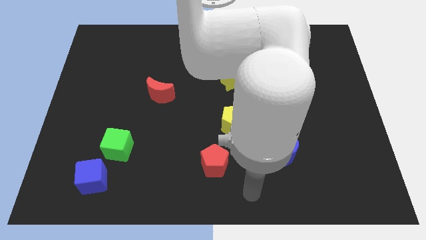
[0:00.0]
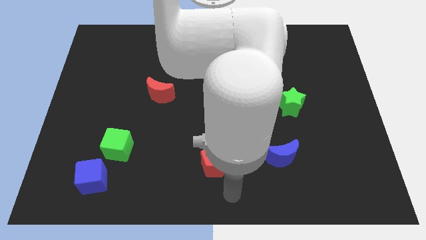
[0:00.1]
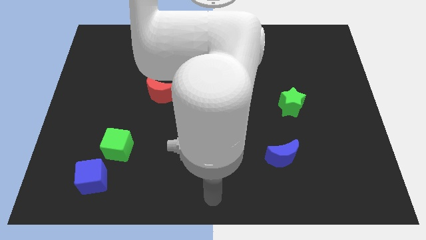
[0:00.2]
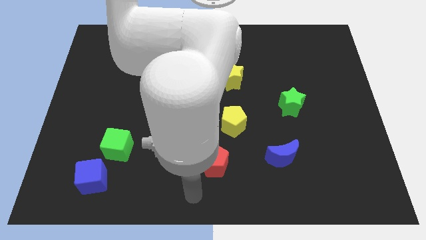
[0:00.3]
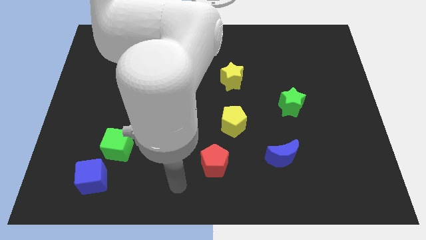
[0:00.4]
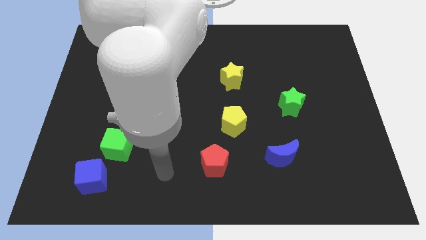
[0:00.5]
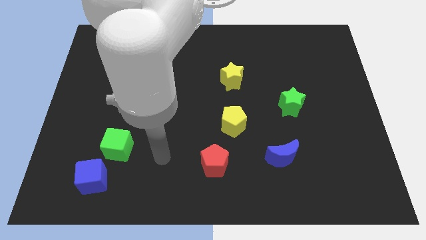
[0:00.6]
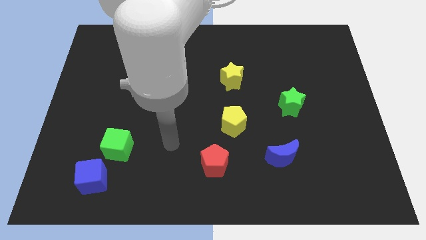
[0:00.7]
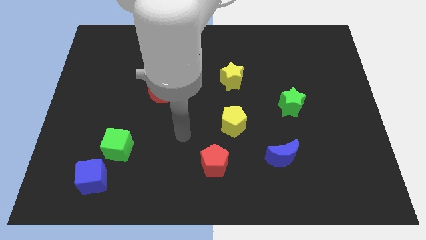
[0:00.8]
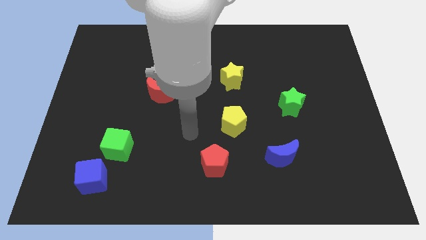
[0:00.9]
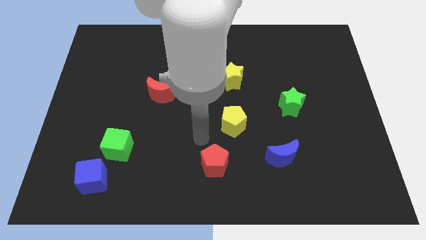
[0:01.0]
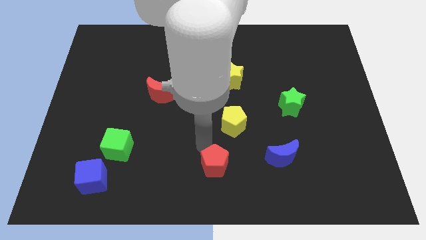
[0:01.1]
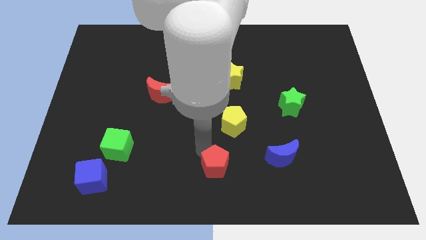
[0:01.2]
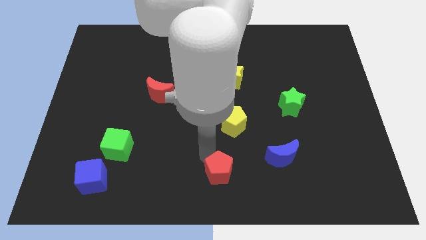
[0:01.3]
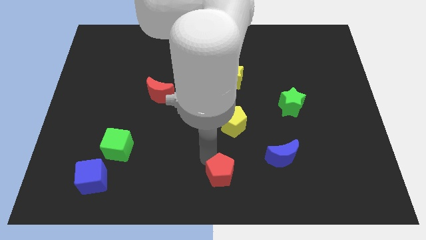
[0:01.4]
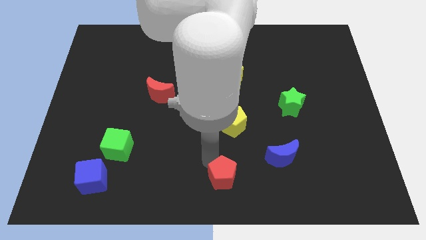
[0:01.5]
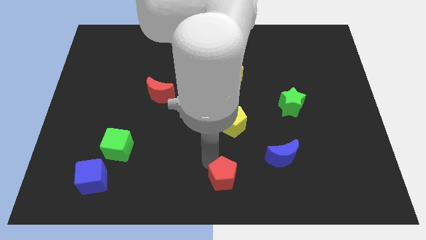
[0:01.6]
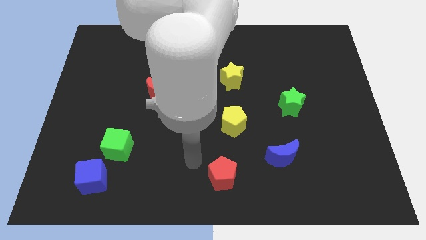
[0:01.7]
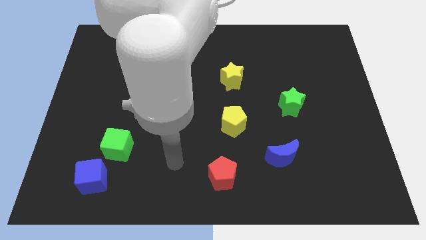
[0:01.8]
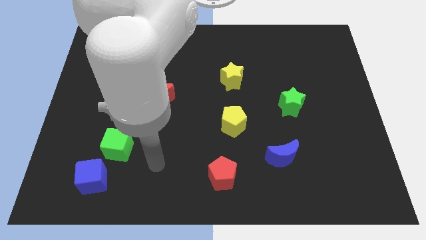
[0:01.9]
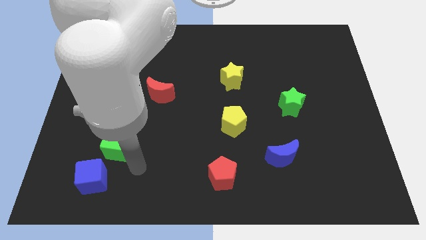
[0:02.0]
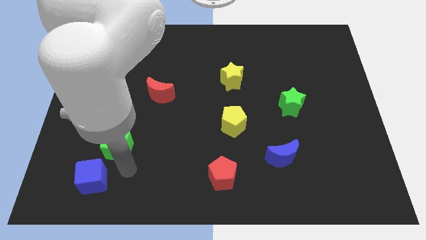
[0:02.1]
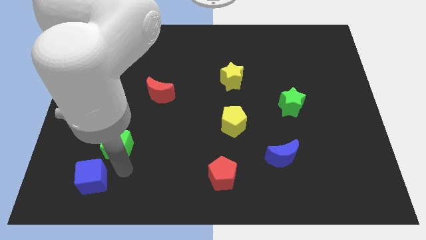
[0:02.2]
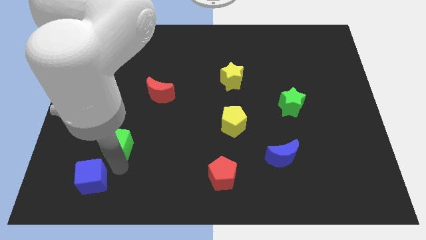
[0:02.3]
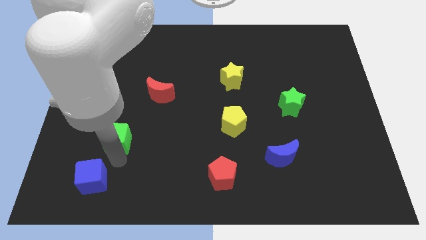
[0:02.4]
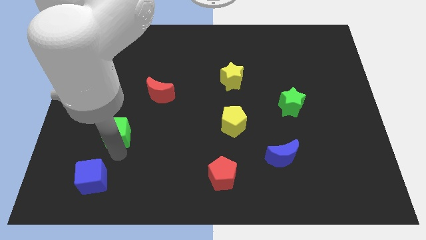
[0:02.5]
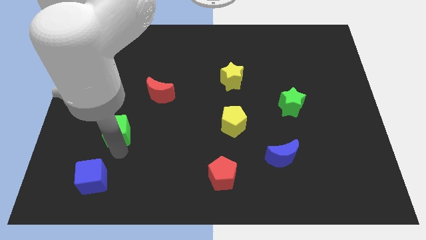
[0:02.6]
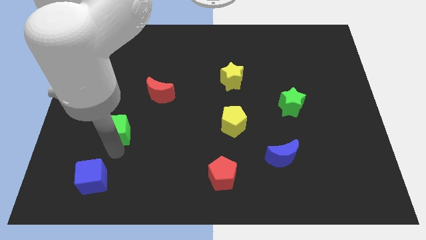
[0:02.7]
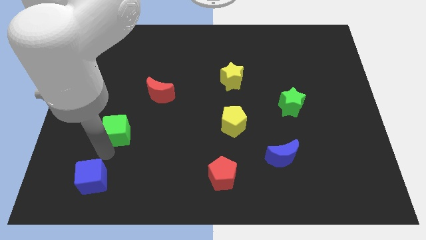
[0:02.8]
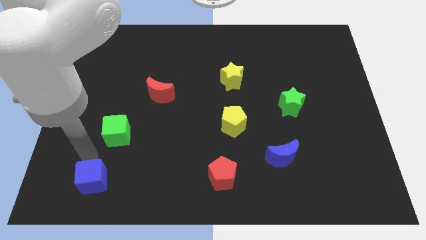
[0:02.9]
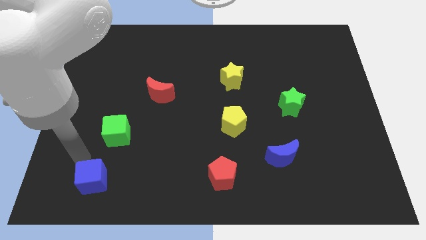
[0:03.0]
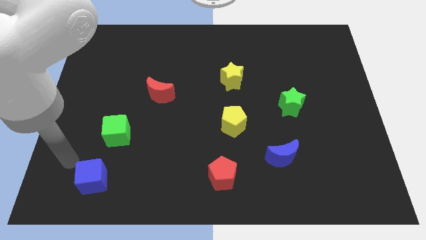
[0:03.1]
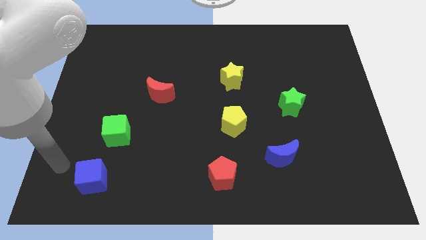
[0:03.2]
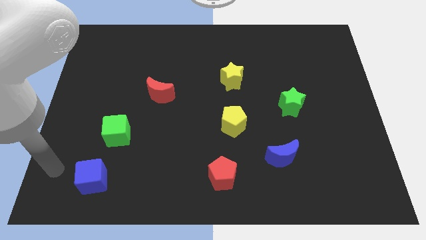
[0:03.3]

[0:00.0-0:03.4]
move the green cube away from the blue cube

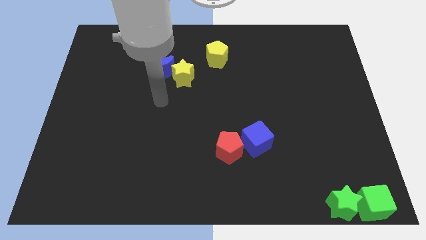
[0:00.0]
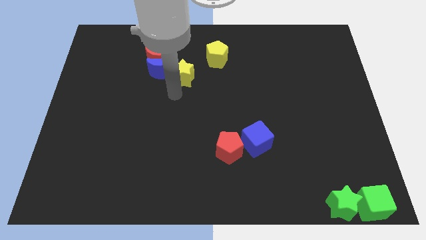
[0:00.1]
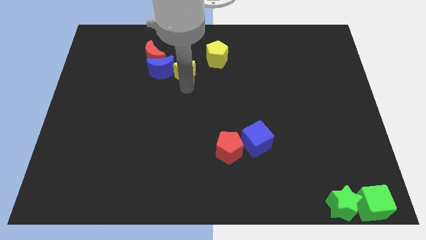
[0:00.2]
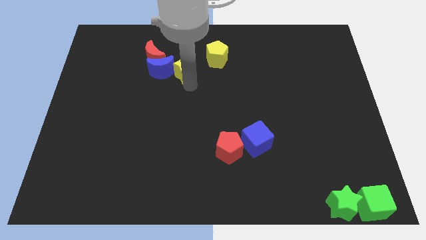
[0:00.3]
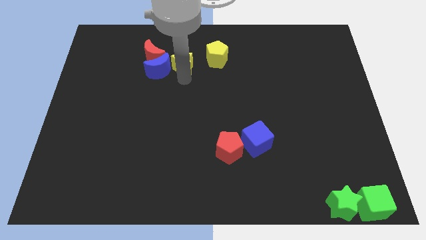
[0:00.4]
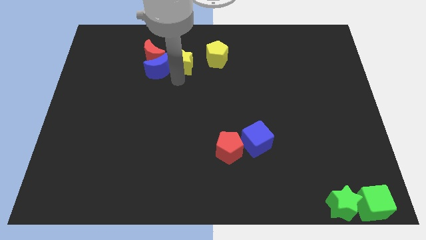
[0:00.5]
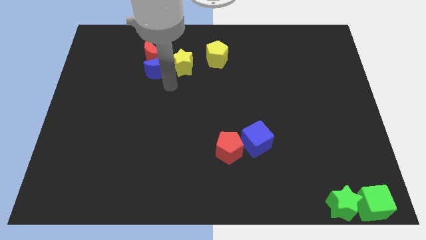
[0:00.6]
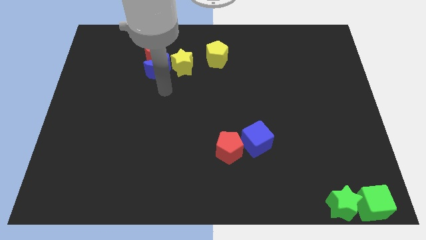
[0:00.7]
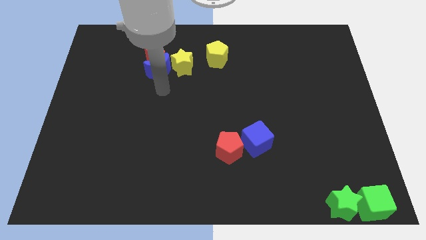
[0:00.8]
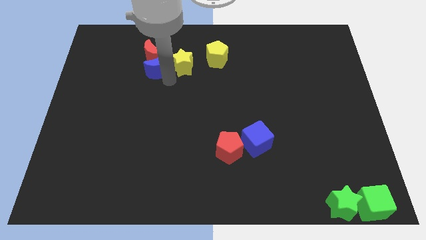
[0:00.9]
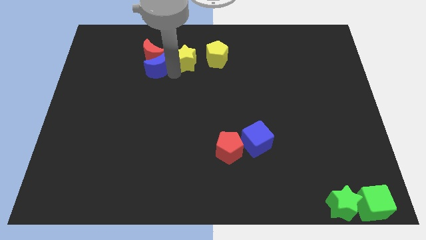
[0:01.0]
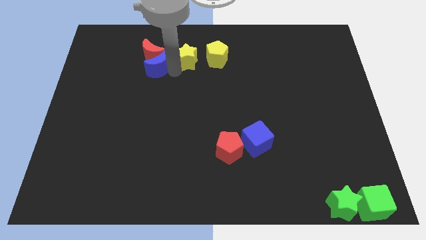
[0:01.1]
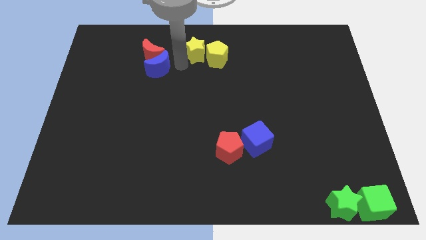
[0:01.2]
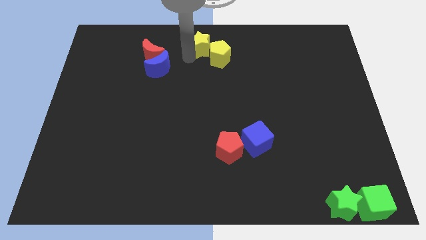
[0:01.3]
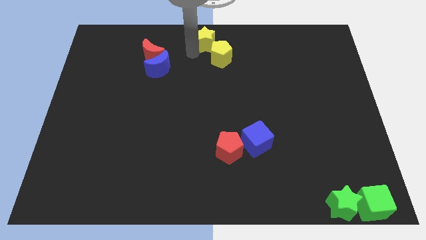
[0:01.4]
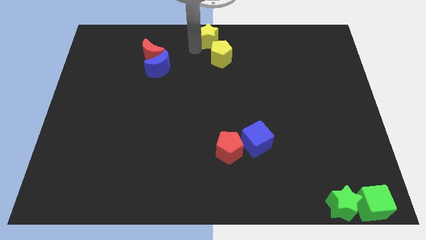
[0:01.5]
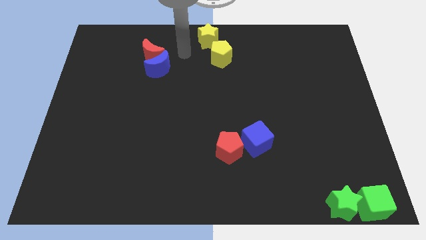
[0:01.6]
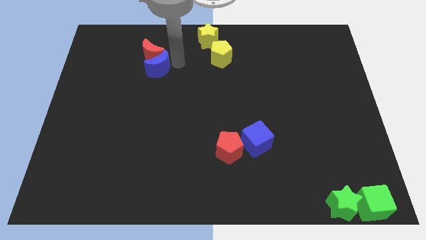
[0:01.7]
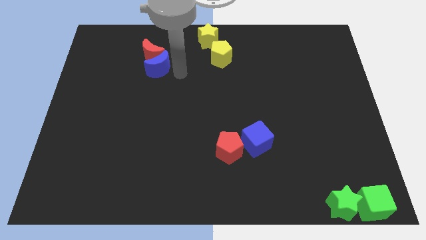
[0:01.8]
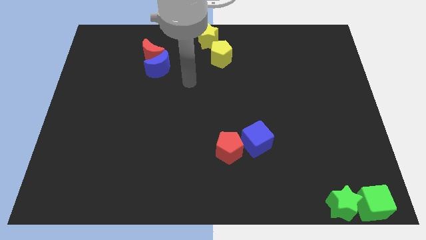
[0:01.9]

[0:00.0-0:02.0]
push the yellow star towards the top center

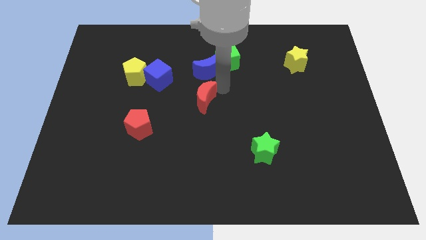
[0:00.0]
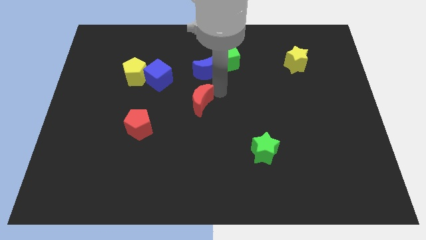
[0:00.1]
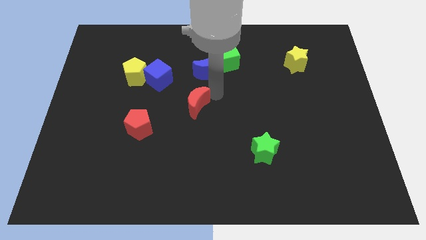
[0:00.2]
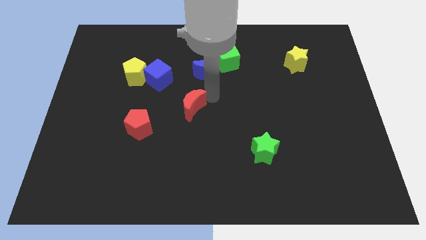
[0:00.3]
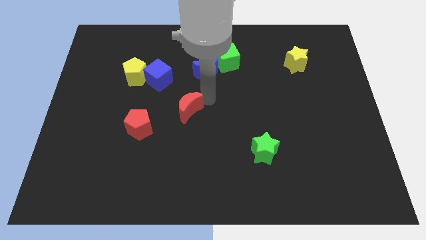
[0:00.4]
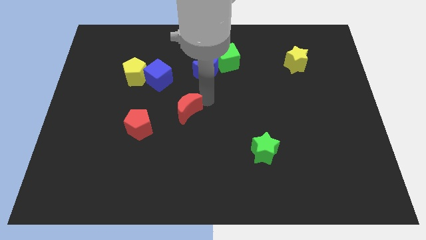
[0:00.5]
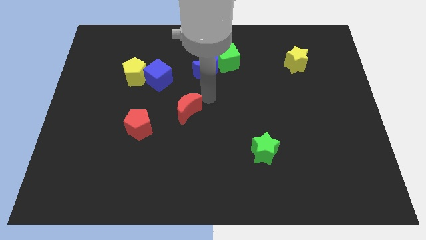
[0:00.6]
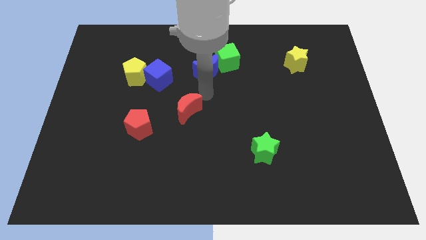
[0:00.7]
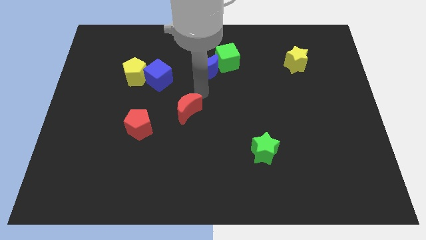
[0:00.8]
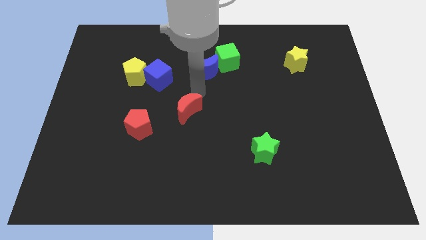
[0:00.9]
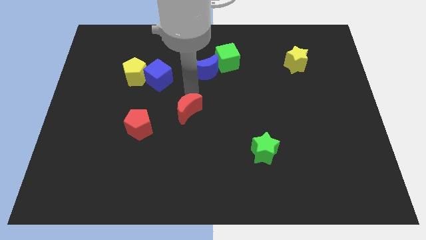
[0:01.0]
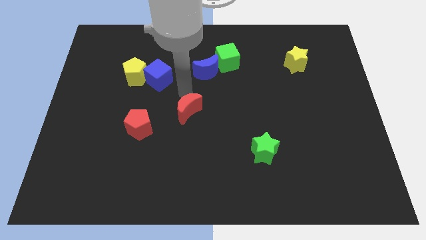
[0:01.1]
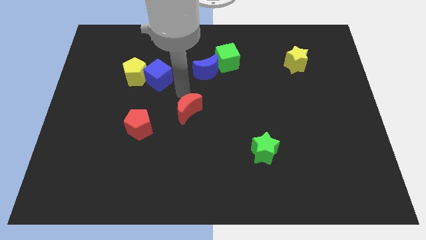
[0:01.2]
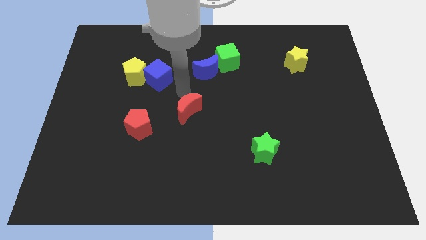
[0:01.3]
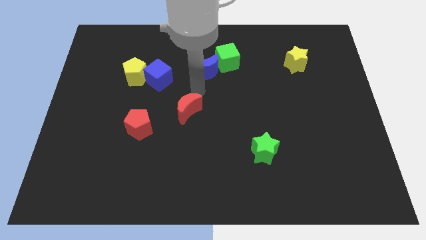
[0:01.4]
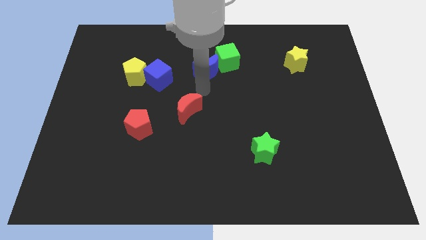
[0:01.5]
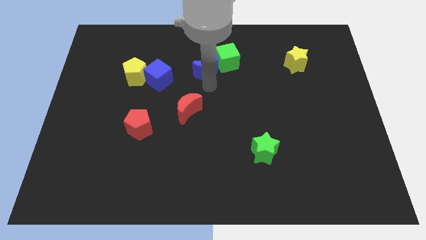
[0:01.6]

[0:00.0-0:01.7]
push the red crescent towards the bottom of the board

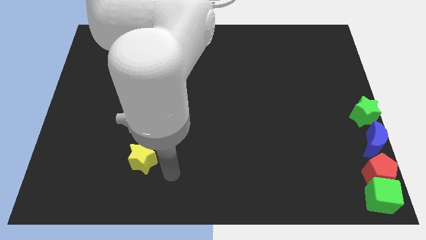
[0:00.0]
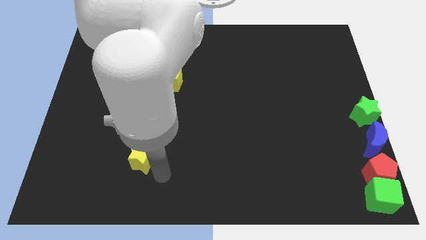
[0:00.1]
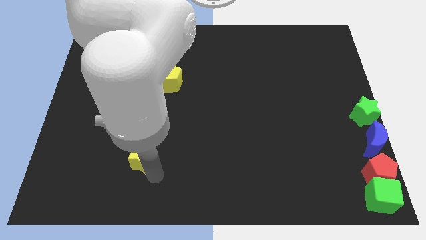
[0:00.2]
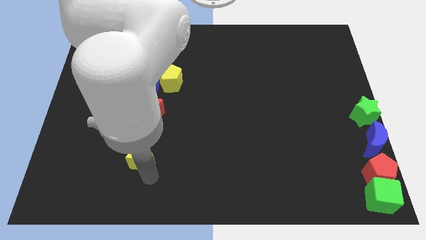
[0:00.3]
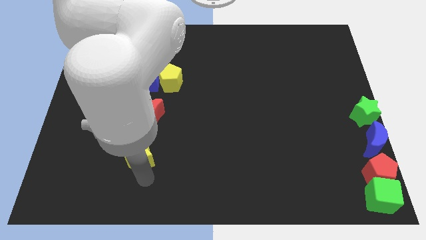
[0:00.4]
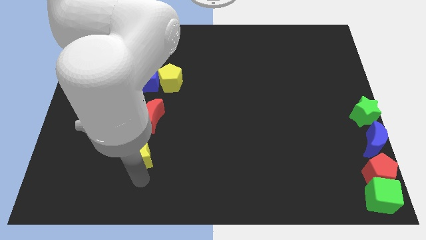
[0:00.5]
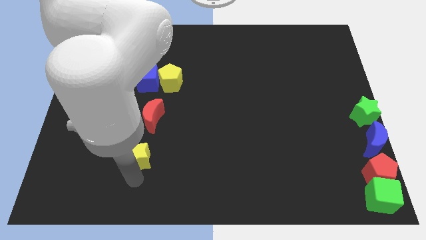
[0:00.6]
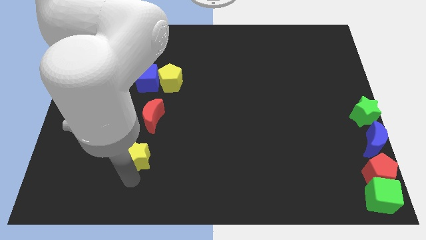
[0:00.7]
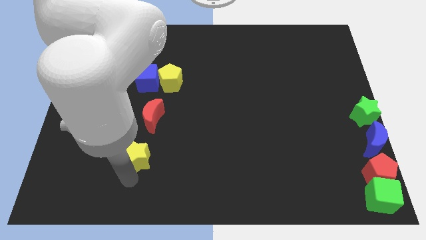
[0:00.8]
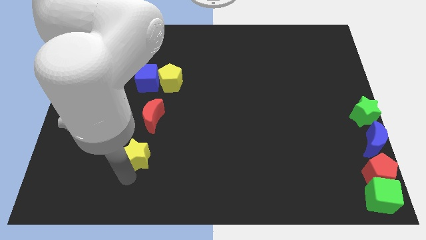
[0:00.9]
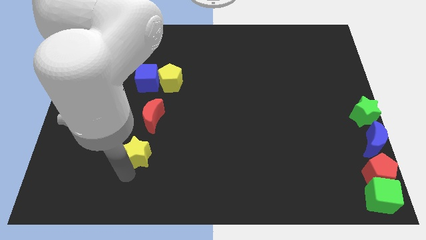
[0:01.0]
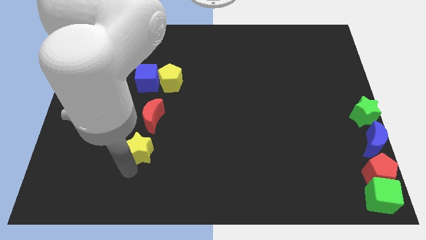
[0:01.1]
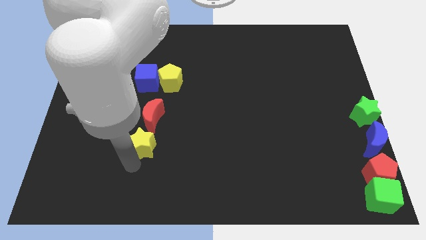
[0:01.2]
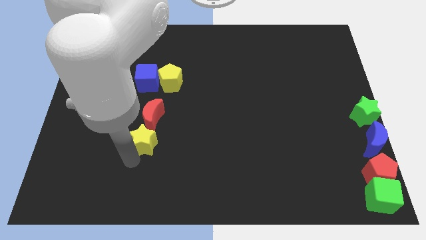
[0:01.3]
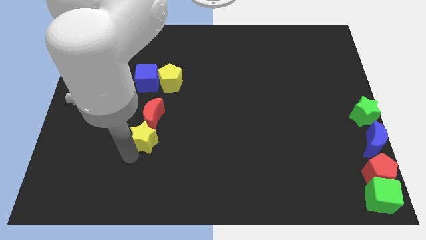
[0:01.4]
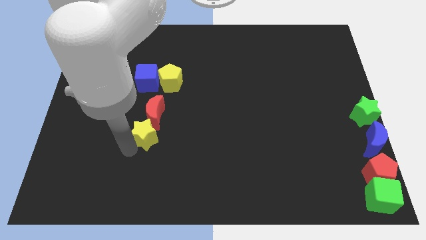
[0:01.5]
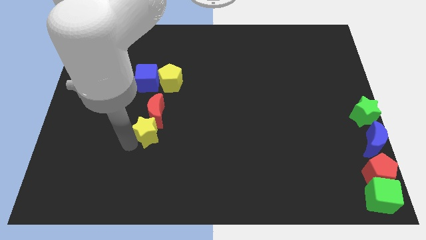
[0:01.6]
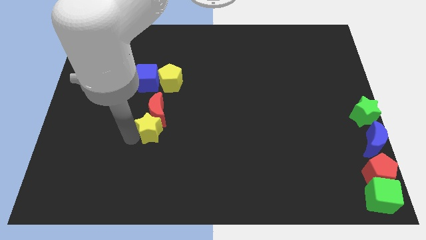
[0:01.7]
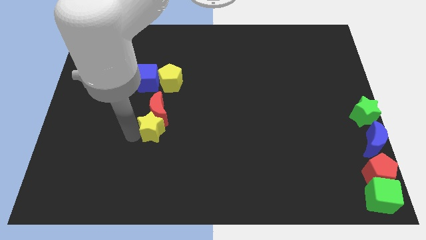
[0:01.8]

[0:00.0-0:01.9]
push the yellow star to the bottom left of the red moon

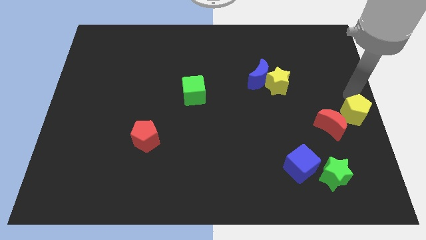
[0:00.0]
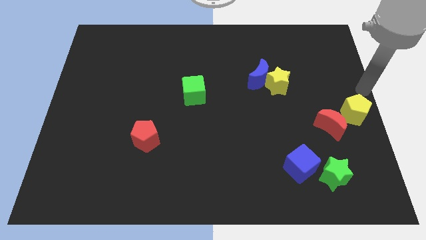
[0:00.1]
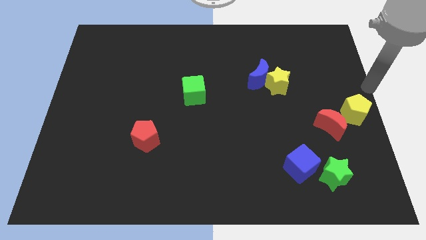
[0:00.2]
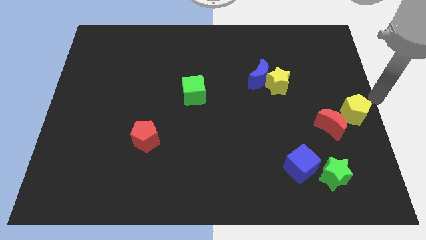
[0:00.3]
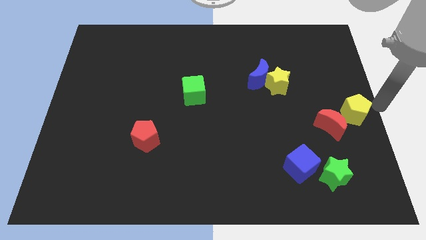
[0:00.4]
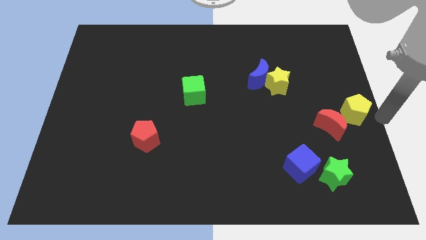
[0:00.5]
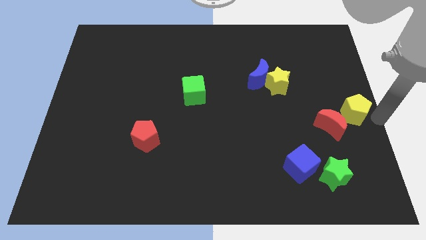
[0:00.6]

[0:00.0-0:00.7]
move your arm to the right of the yellow pentagon
